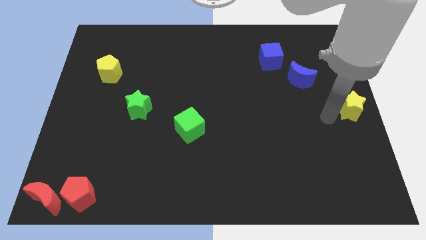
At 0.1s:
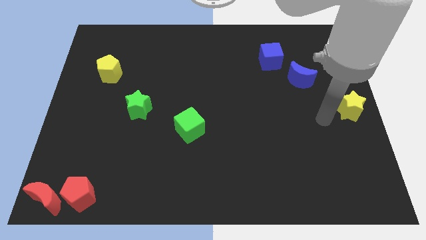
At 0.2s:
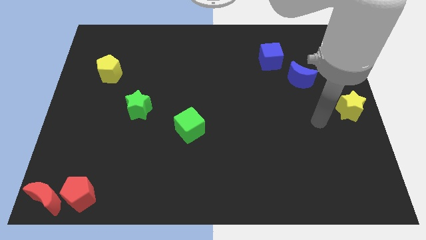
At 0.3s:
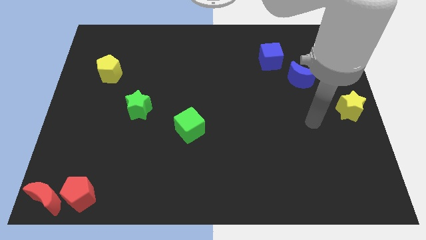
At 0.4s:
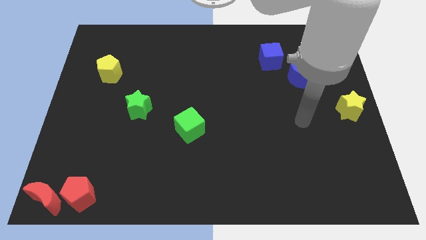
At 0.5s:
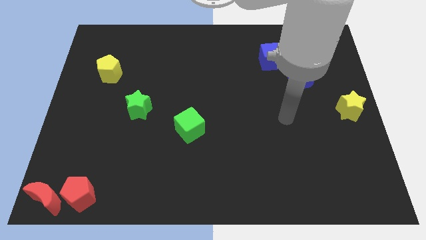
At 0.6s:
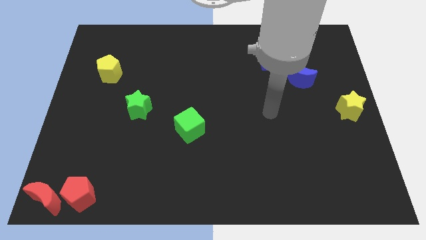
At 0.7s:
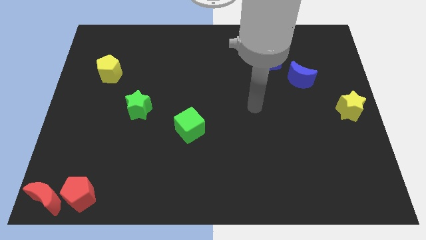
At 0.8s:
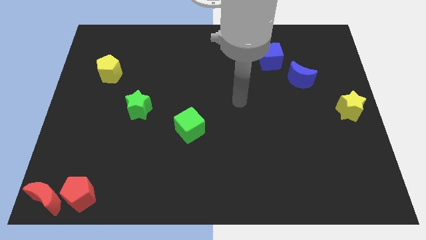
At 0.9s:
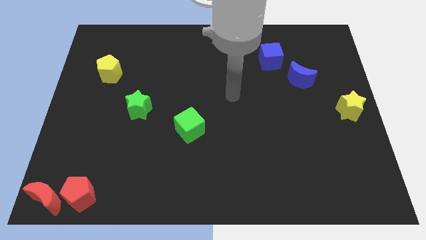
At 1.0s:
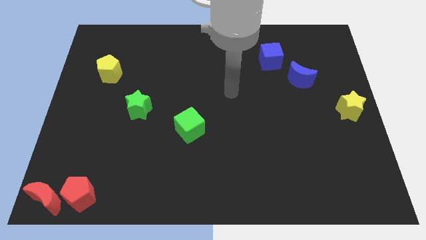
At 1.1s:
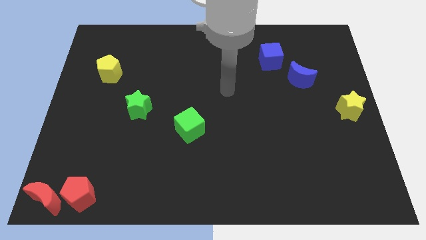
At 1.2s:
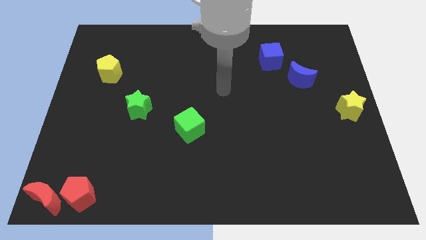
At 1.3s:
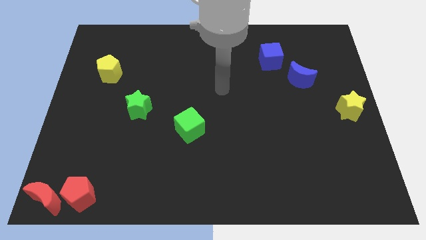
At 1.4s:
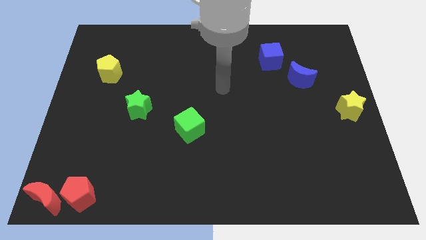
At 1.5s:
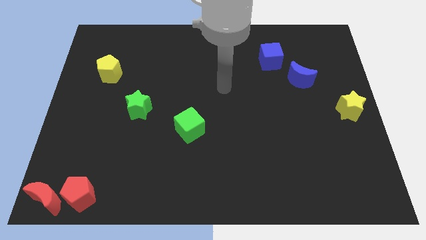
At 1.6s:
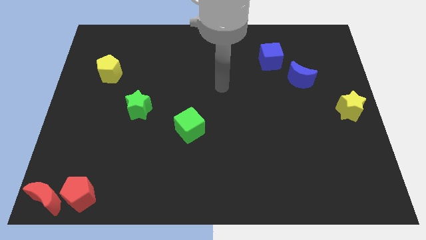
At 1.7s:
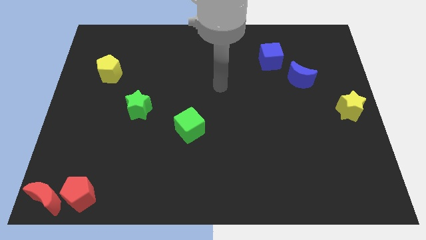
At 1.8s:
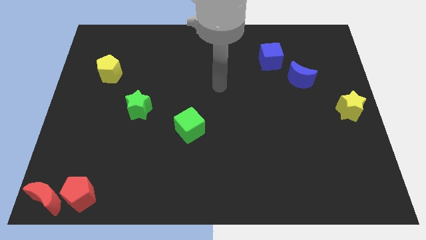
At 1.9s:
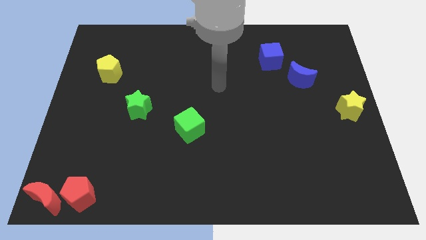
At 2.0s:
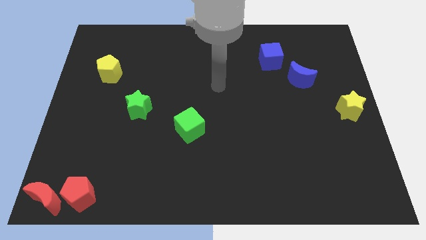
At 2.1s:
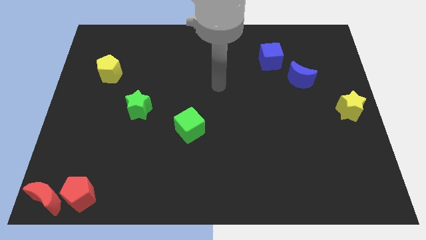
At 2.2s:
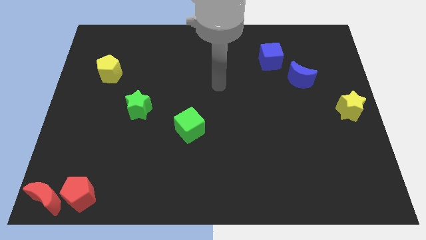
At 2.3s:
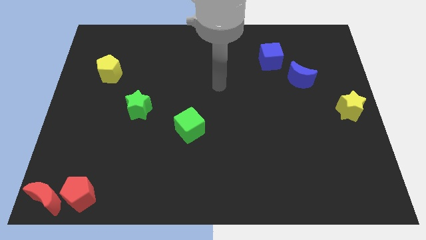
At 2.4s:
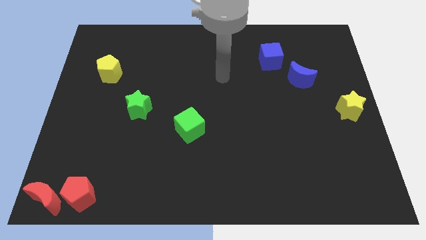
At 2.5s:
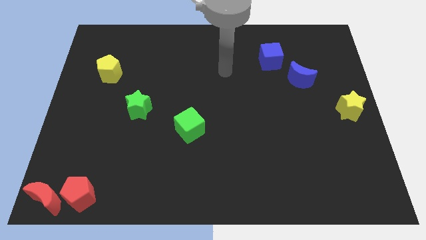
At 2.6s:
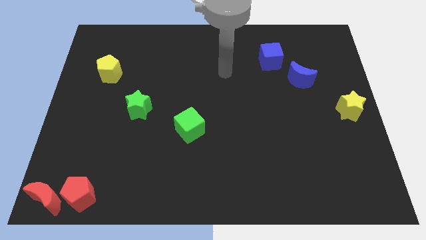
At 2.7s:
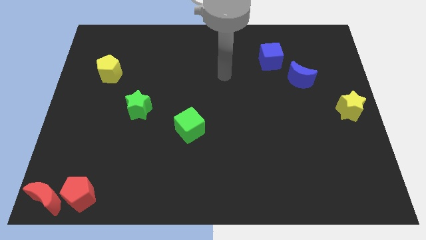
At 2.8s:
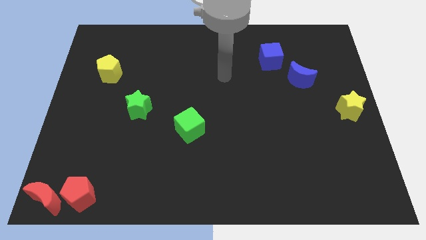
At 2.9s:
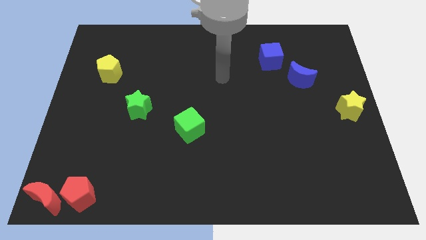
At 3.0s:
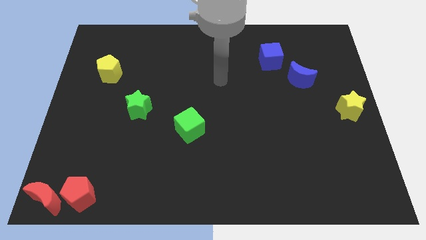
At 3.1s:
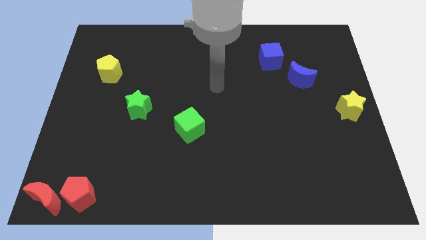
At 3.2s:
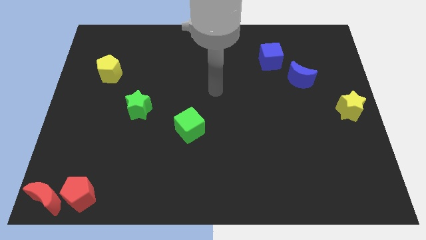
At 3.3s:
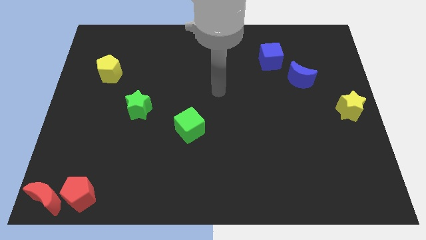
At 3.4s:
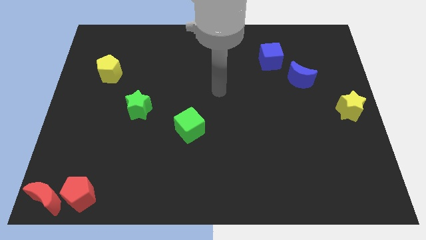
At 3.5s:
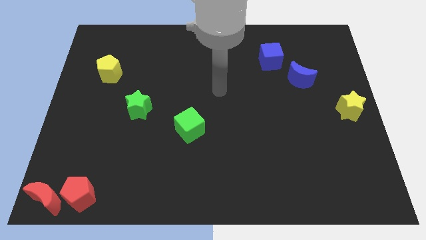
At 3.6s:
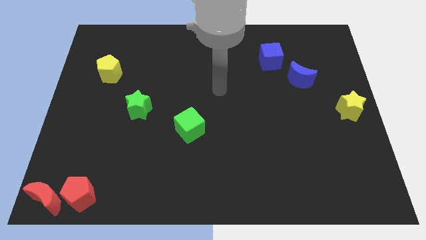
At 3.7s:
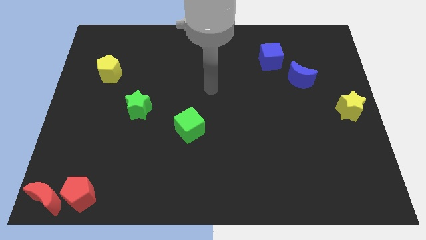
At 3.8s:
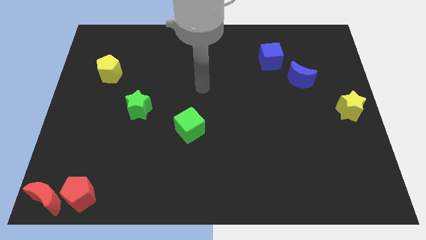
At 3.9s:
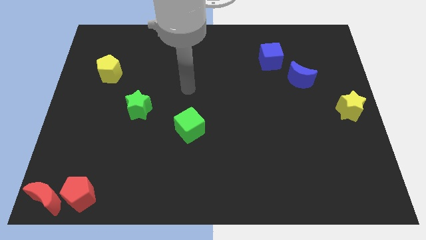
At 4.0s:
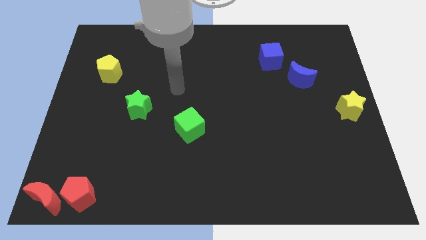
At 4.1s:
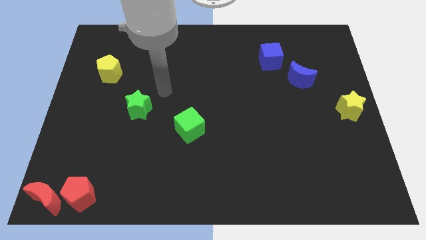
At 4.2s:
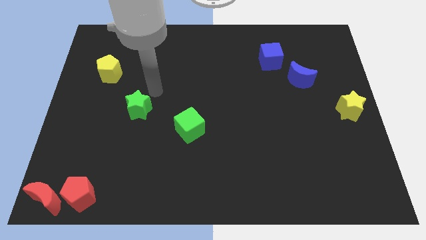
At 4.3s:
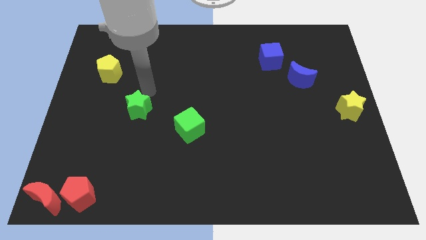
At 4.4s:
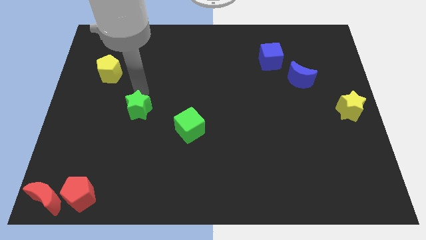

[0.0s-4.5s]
place the arm above the green star

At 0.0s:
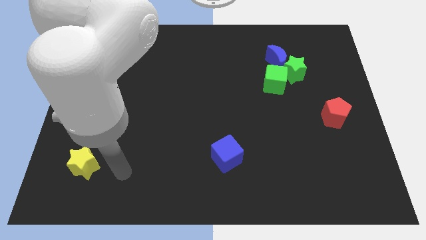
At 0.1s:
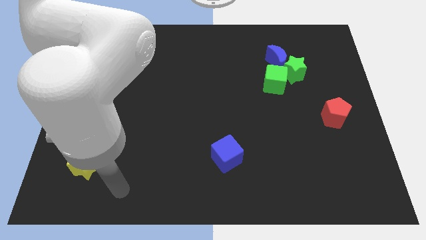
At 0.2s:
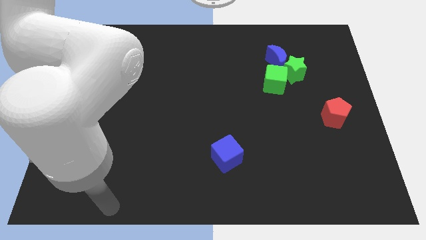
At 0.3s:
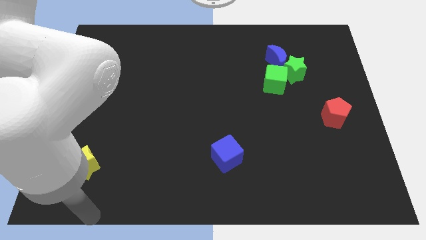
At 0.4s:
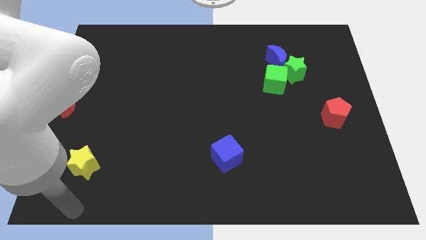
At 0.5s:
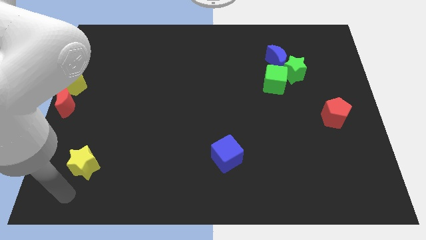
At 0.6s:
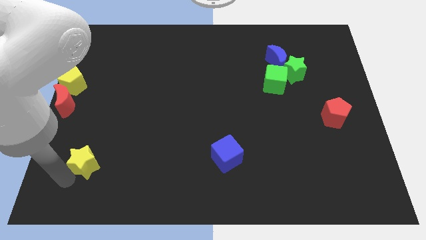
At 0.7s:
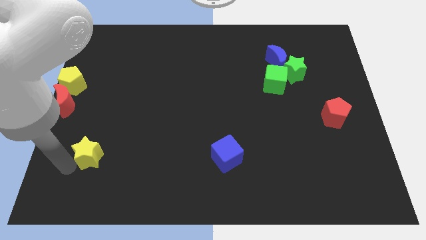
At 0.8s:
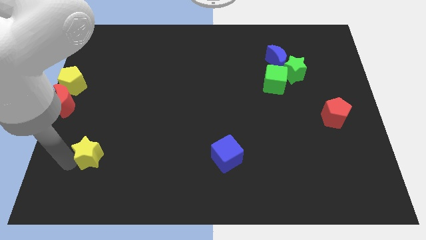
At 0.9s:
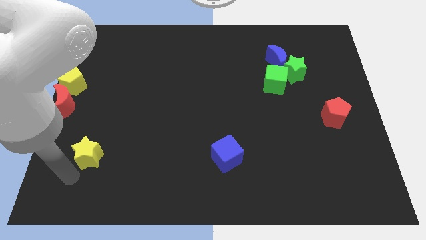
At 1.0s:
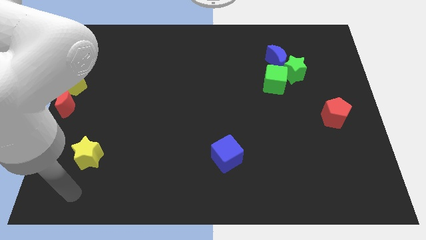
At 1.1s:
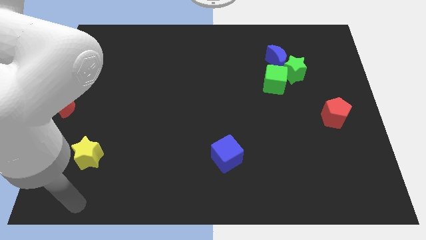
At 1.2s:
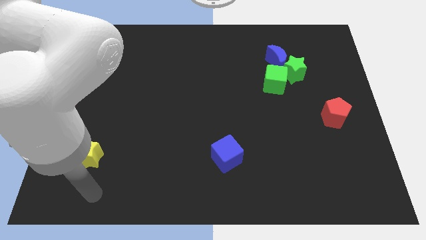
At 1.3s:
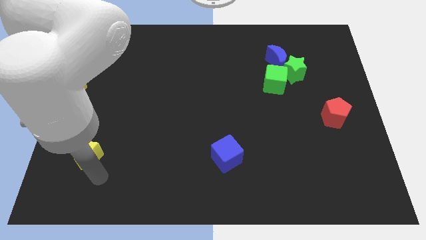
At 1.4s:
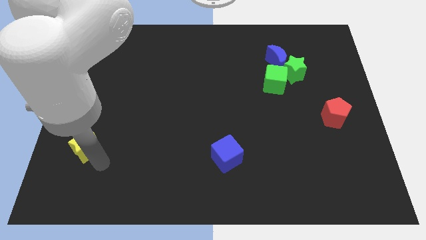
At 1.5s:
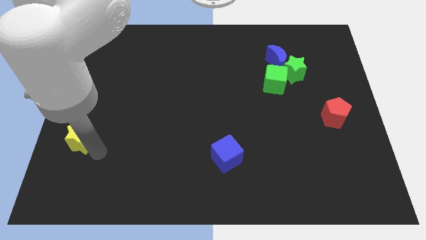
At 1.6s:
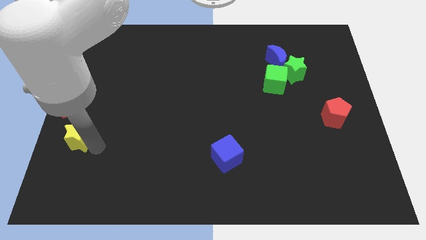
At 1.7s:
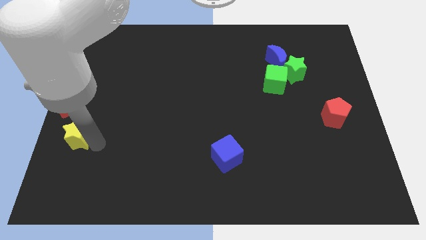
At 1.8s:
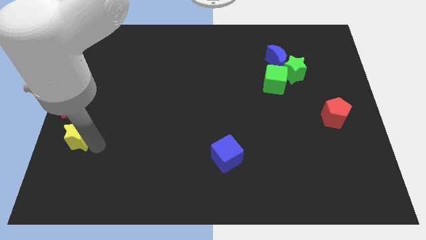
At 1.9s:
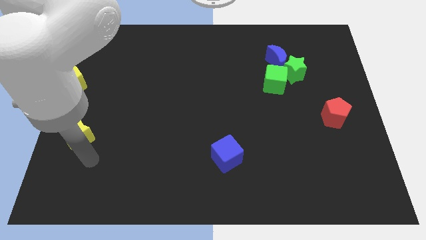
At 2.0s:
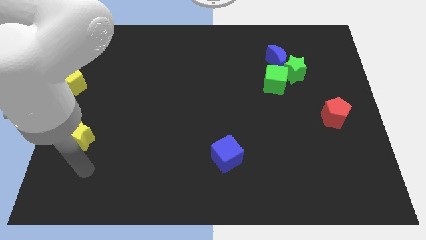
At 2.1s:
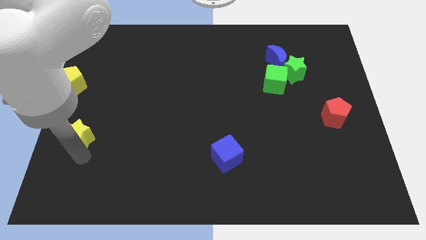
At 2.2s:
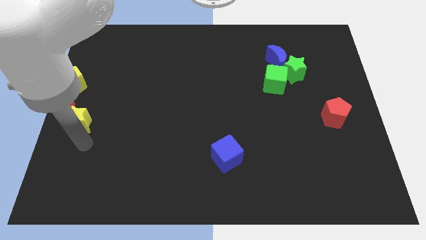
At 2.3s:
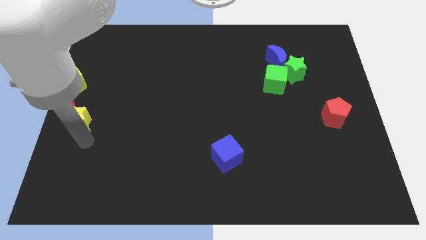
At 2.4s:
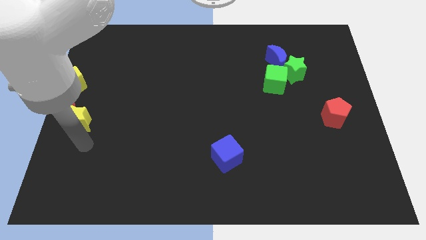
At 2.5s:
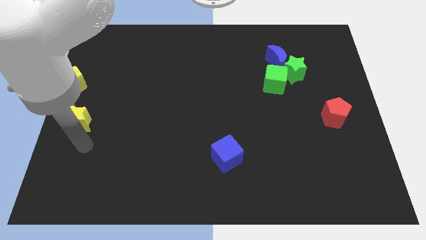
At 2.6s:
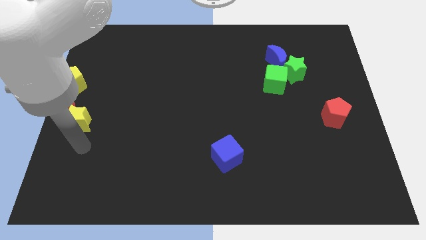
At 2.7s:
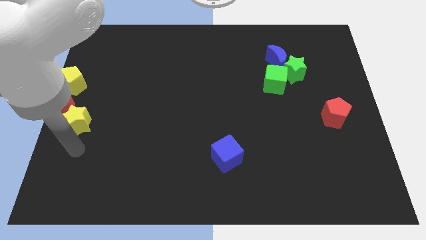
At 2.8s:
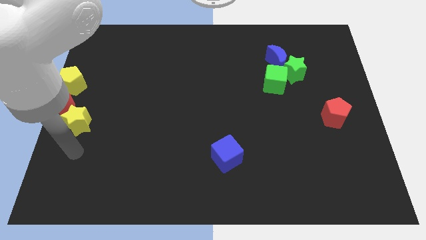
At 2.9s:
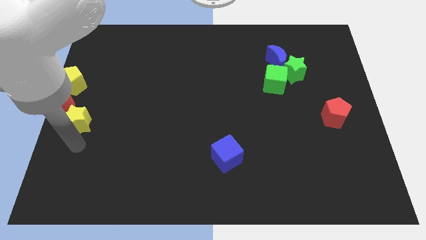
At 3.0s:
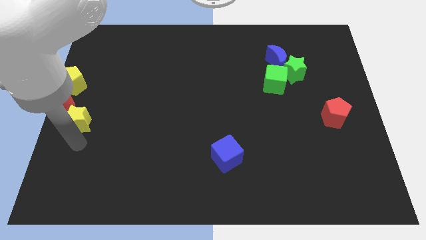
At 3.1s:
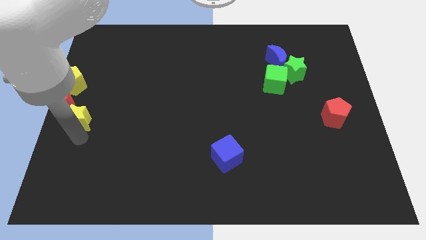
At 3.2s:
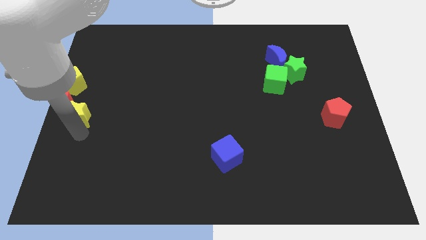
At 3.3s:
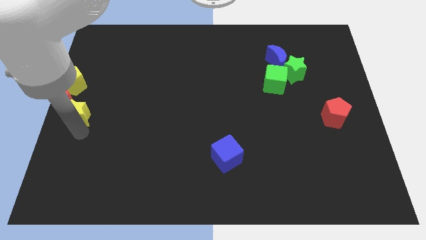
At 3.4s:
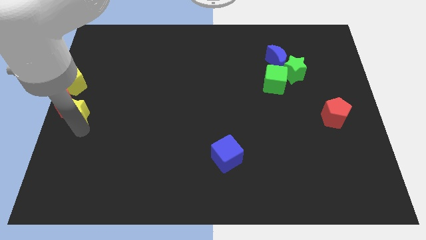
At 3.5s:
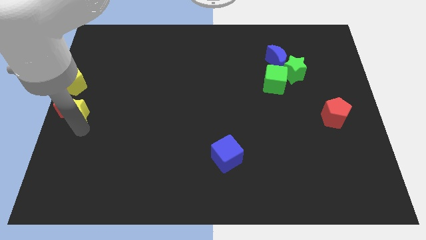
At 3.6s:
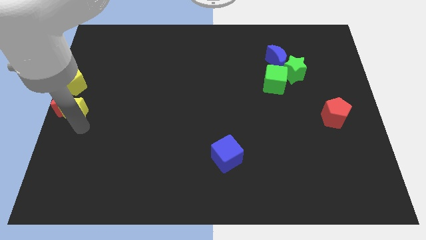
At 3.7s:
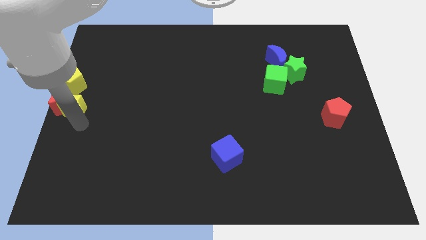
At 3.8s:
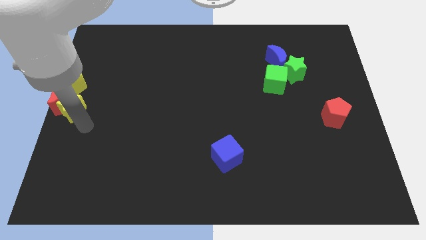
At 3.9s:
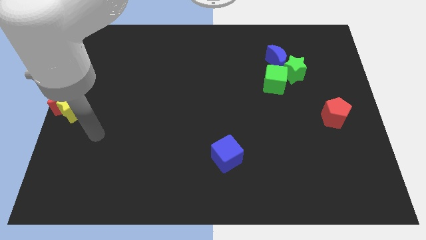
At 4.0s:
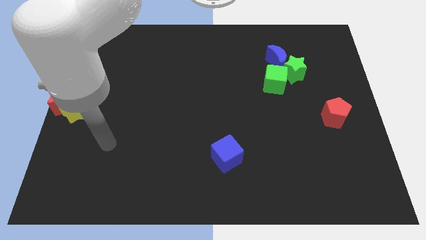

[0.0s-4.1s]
move the yellow star into the right of the red crescent

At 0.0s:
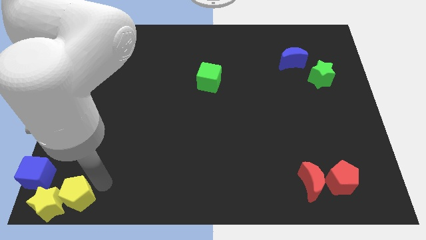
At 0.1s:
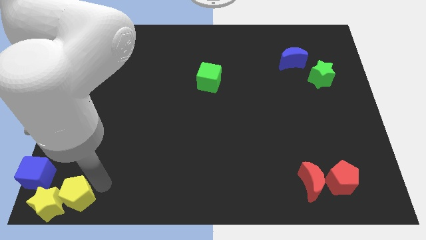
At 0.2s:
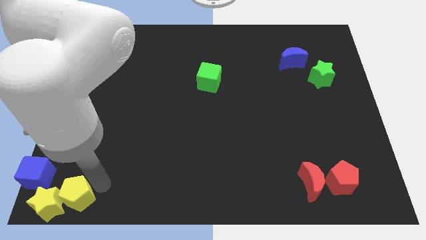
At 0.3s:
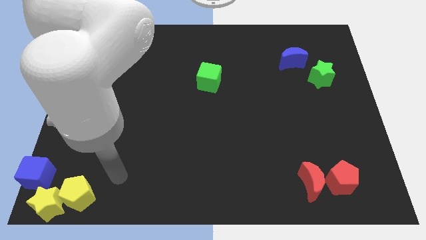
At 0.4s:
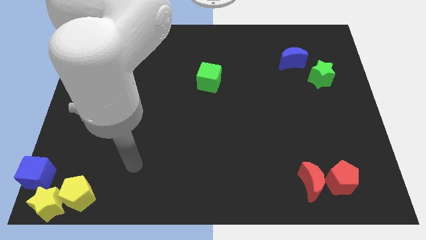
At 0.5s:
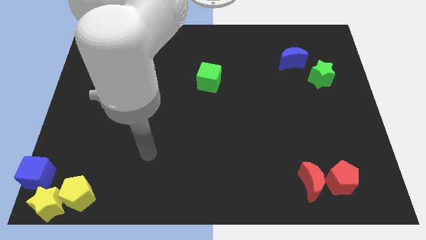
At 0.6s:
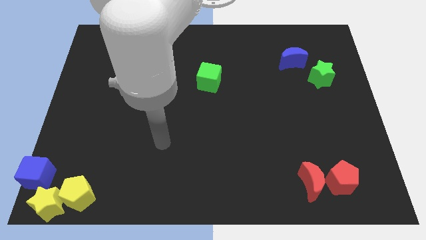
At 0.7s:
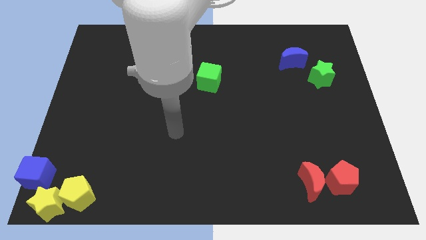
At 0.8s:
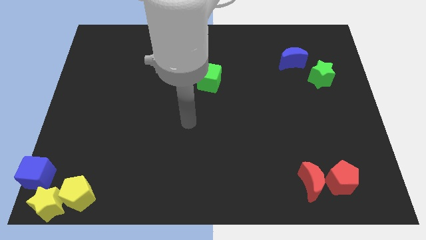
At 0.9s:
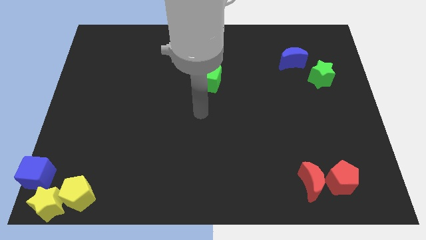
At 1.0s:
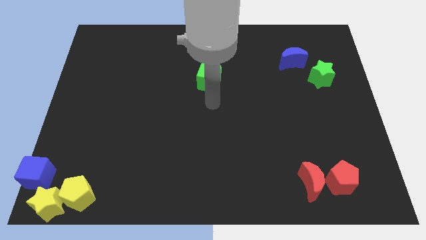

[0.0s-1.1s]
place arm below green cube
